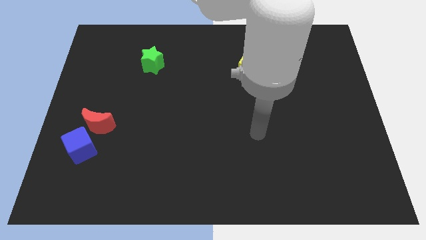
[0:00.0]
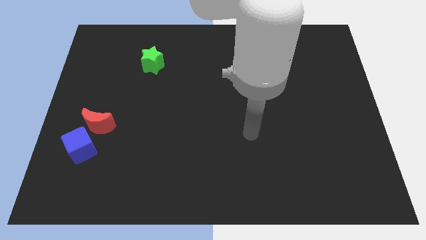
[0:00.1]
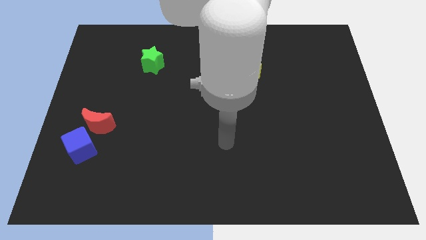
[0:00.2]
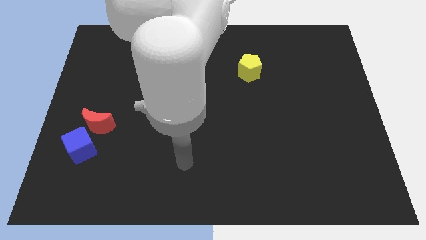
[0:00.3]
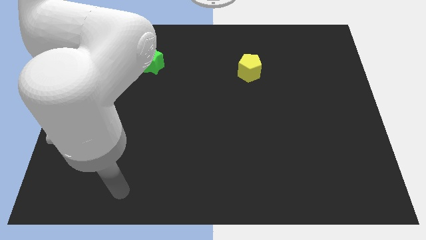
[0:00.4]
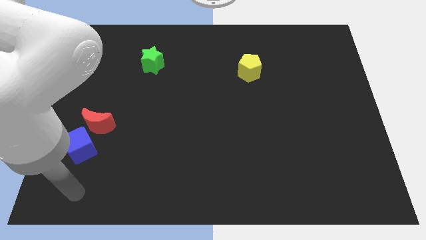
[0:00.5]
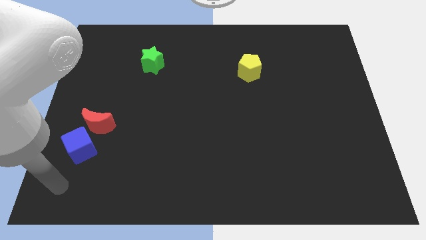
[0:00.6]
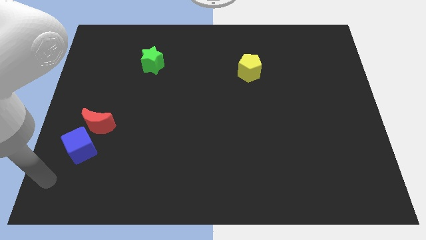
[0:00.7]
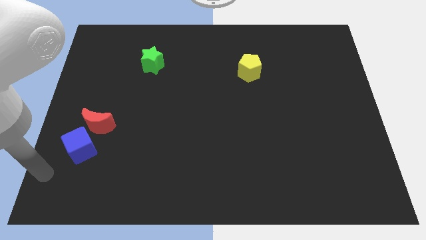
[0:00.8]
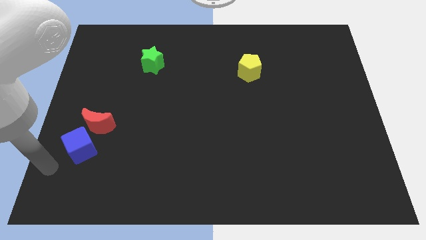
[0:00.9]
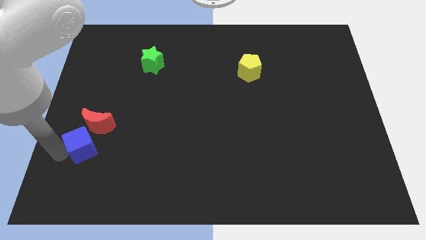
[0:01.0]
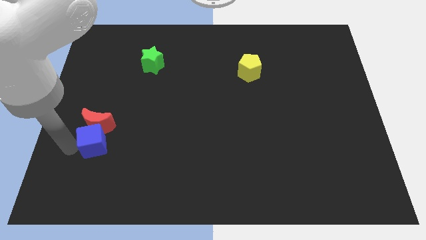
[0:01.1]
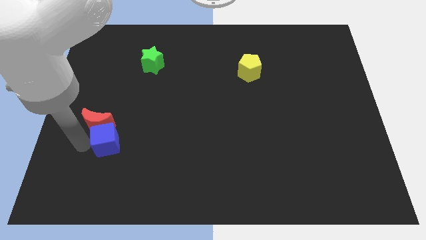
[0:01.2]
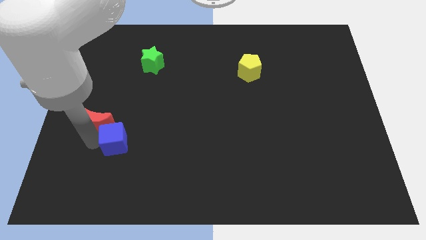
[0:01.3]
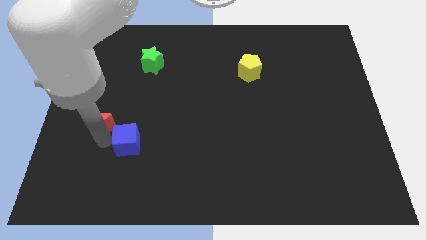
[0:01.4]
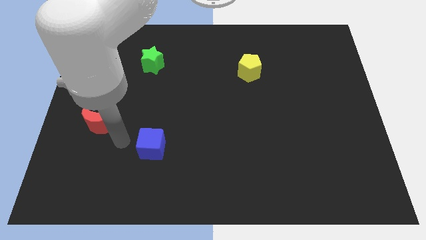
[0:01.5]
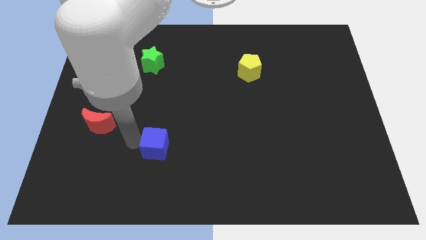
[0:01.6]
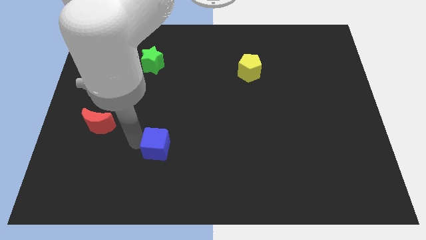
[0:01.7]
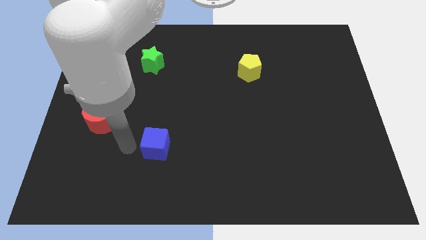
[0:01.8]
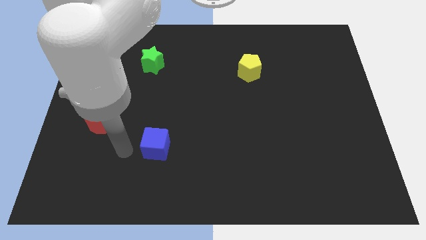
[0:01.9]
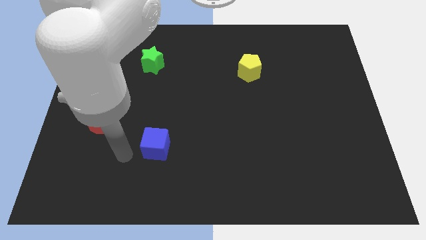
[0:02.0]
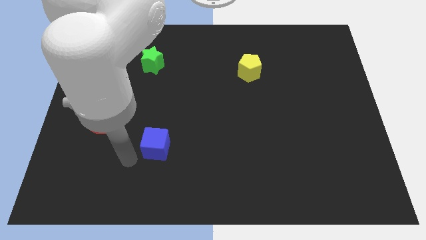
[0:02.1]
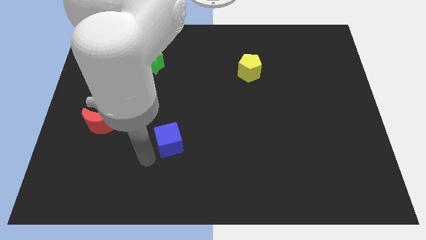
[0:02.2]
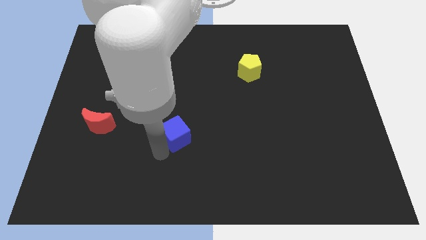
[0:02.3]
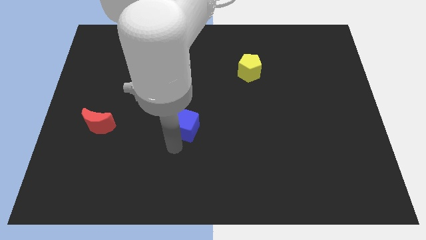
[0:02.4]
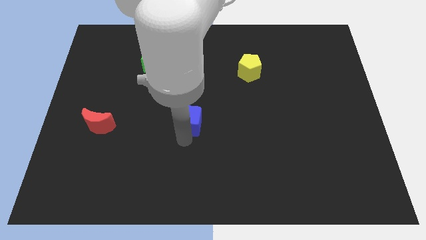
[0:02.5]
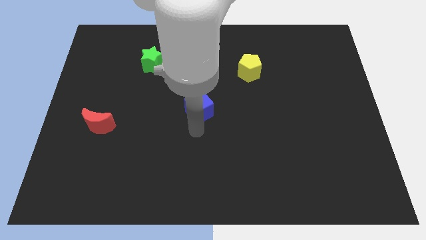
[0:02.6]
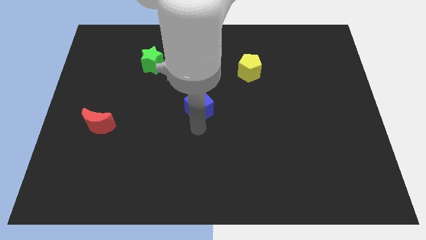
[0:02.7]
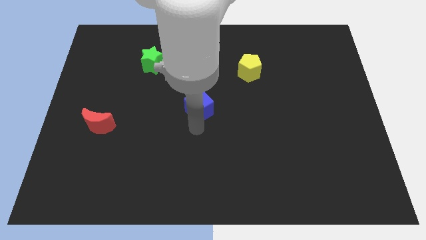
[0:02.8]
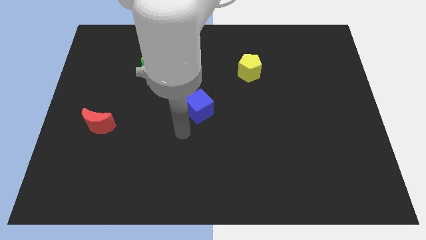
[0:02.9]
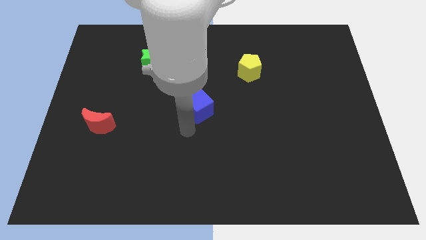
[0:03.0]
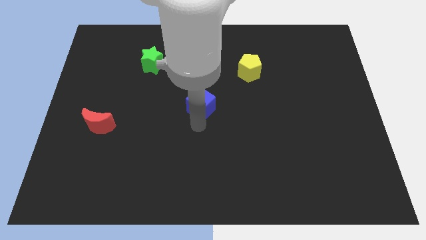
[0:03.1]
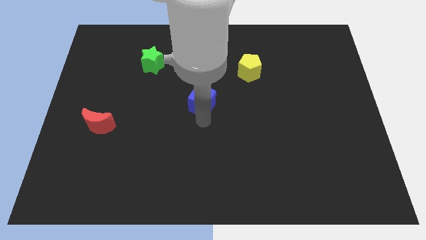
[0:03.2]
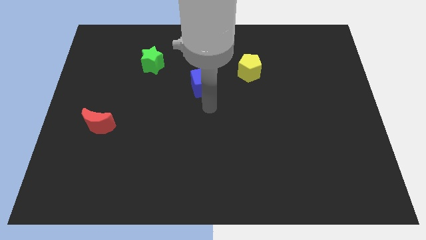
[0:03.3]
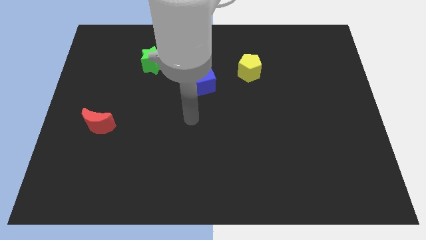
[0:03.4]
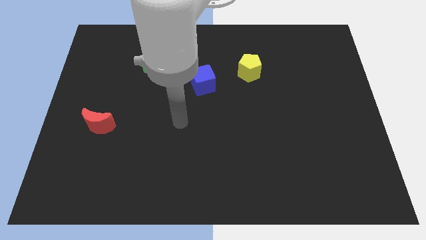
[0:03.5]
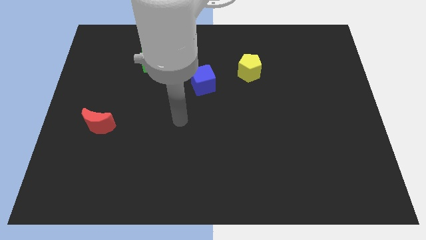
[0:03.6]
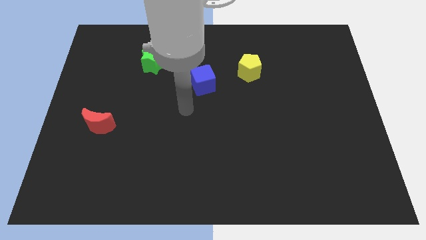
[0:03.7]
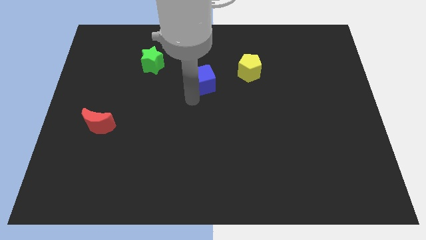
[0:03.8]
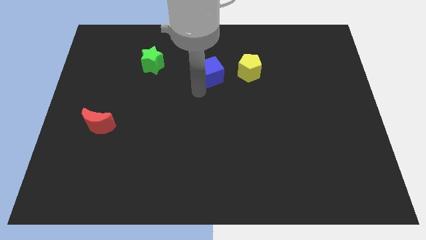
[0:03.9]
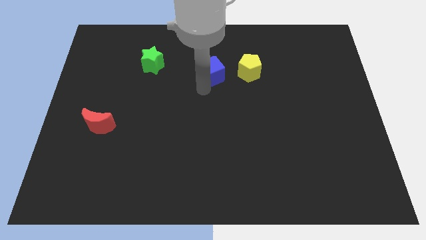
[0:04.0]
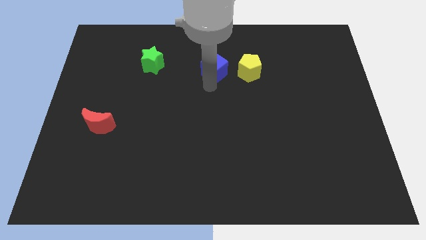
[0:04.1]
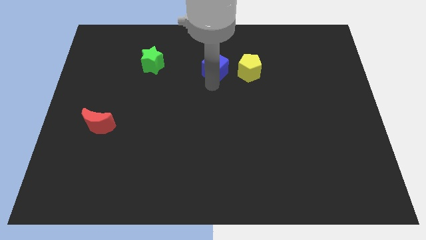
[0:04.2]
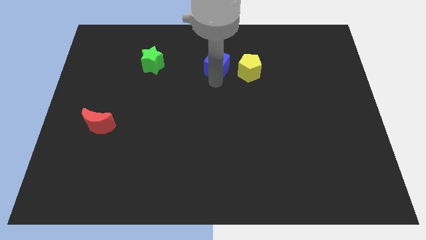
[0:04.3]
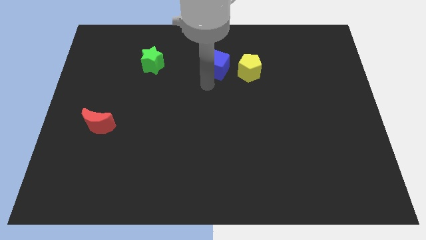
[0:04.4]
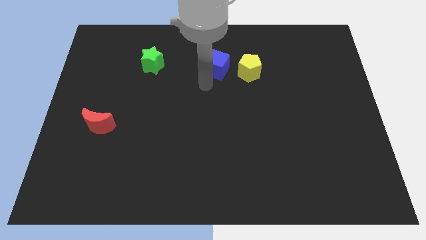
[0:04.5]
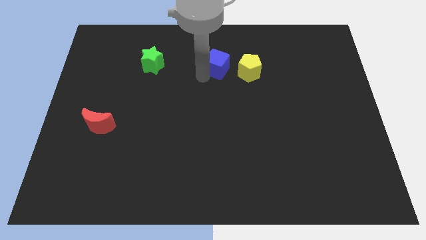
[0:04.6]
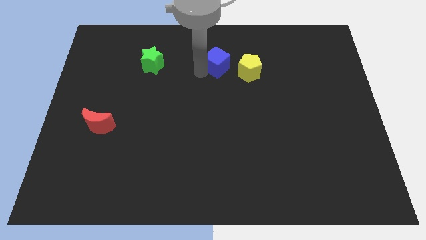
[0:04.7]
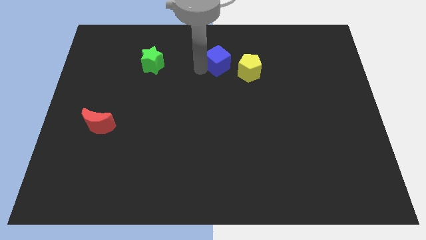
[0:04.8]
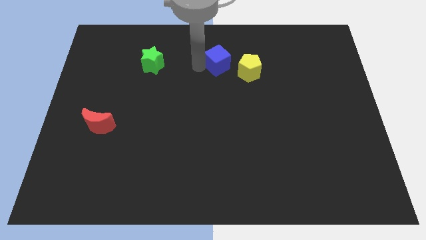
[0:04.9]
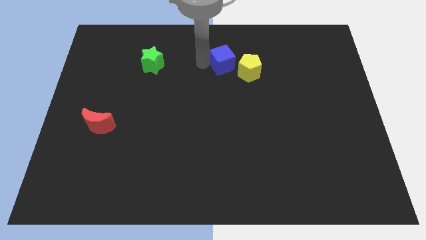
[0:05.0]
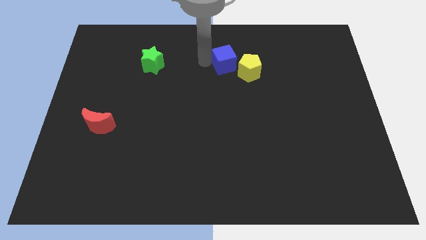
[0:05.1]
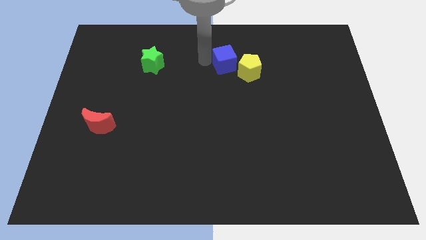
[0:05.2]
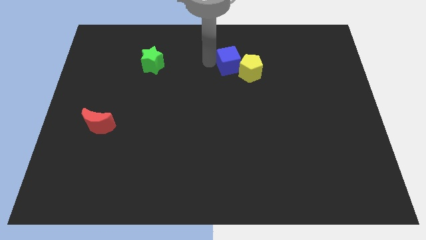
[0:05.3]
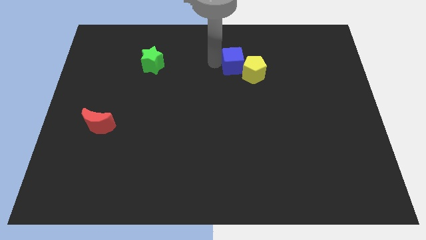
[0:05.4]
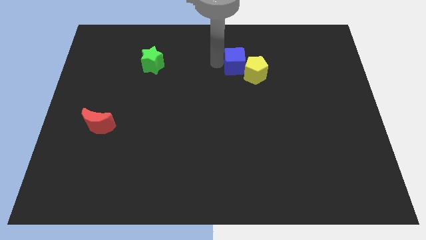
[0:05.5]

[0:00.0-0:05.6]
move the cube close to the yellow block

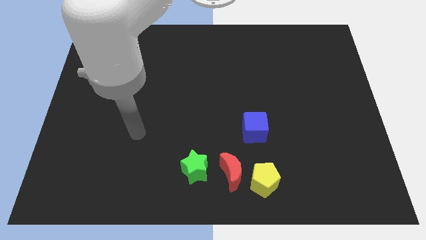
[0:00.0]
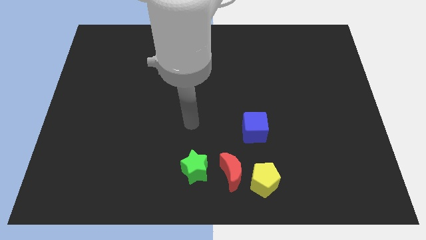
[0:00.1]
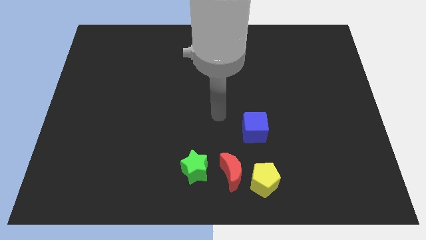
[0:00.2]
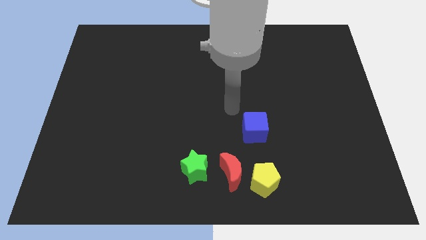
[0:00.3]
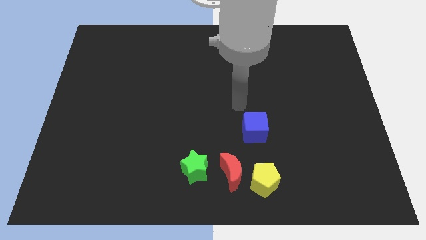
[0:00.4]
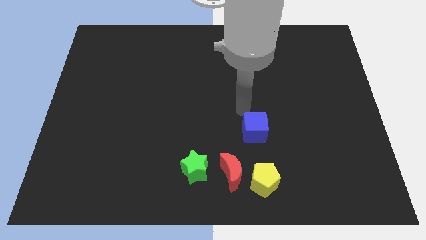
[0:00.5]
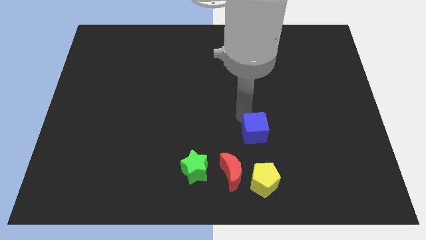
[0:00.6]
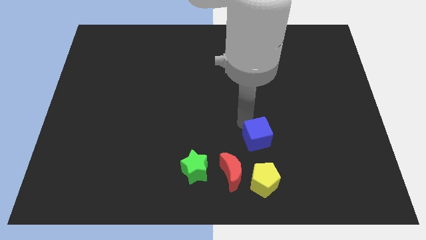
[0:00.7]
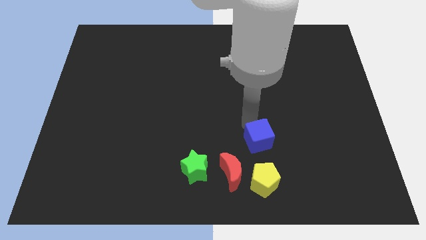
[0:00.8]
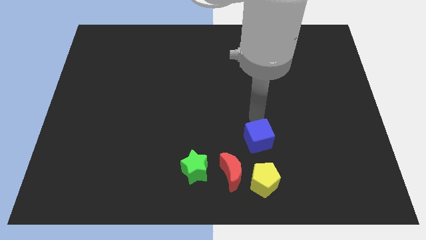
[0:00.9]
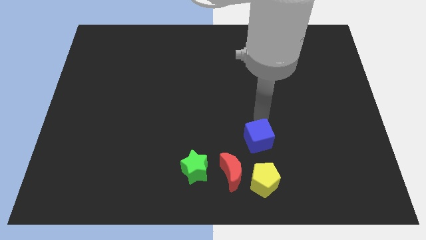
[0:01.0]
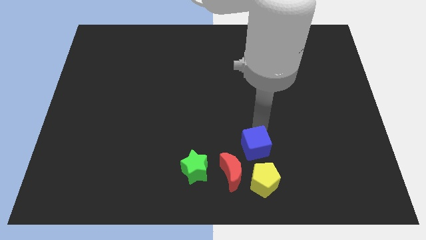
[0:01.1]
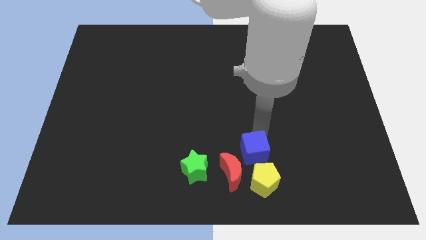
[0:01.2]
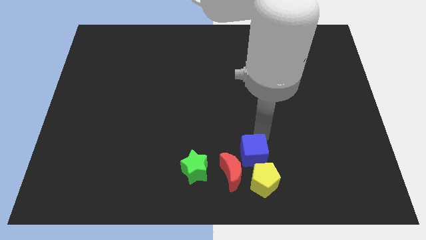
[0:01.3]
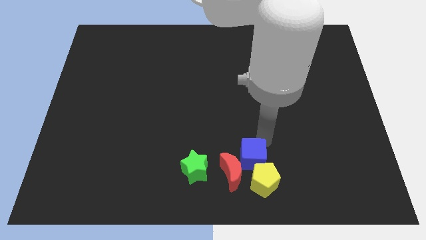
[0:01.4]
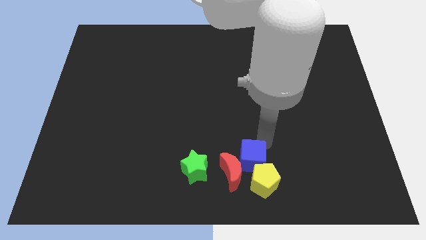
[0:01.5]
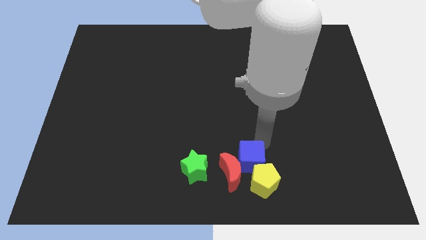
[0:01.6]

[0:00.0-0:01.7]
put the cube next to the pentagon

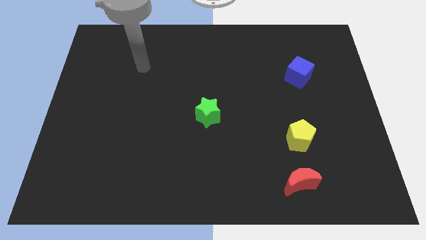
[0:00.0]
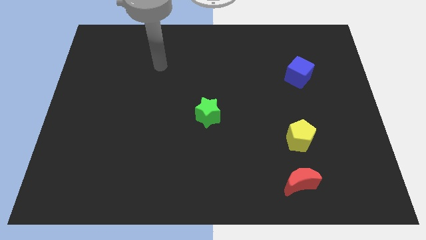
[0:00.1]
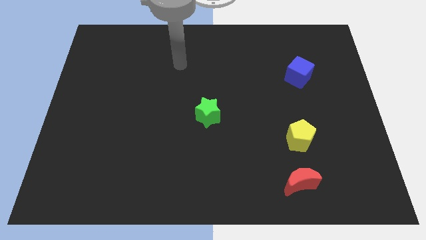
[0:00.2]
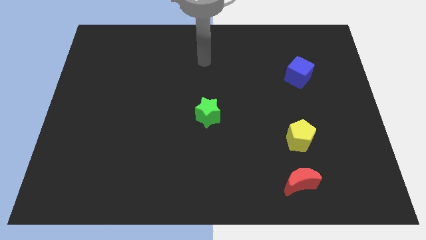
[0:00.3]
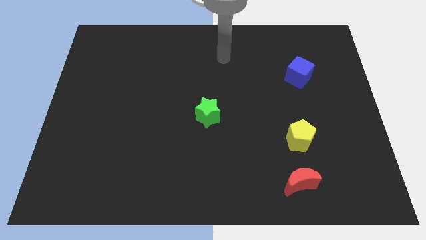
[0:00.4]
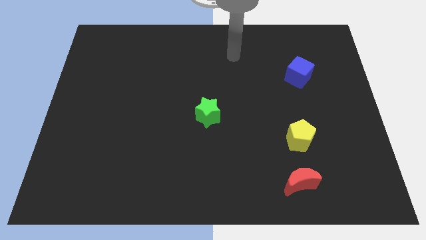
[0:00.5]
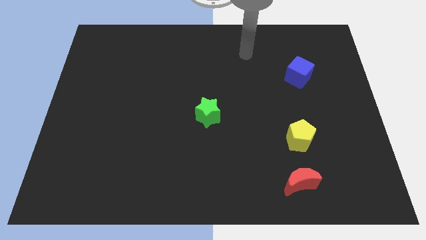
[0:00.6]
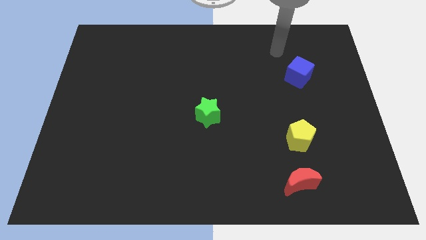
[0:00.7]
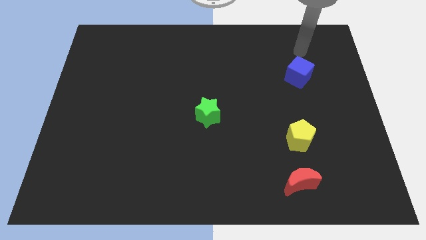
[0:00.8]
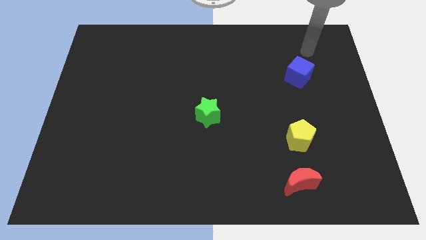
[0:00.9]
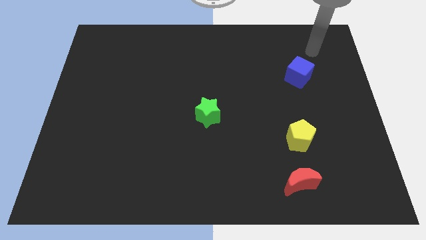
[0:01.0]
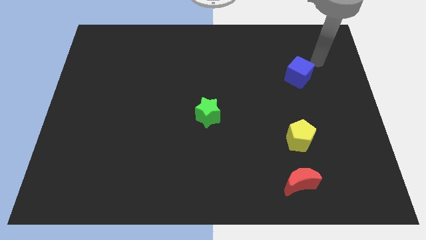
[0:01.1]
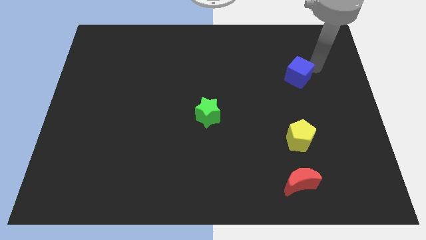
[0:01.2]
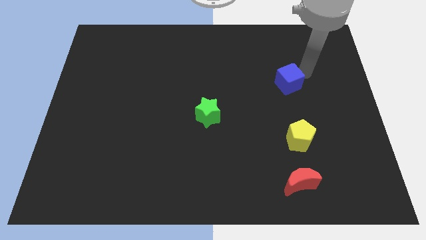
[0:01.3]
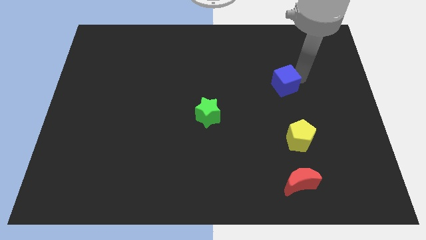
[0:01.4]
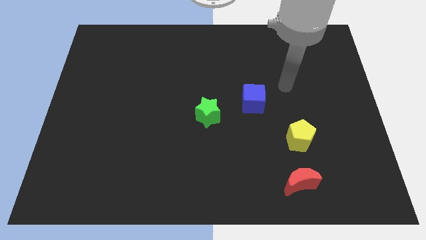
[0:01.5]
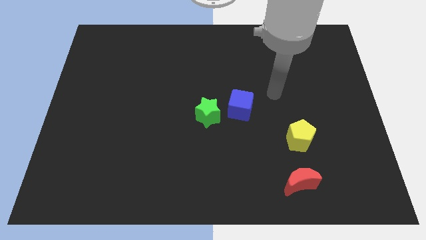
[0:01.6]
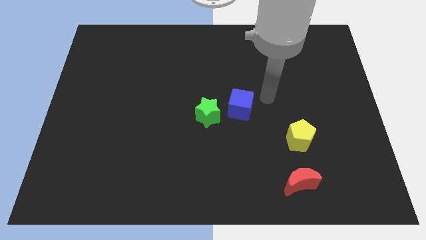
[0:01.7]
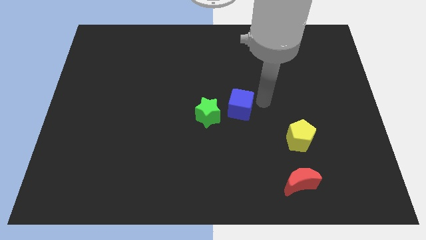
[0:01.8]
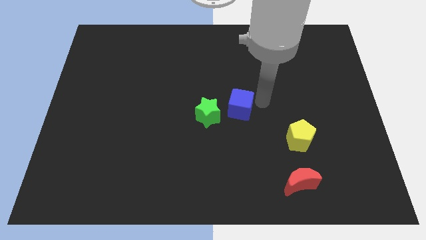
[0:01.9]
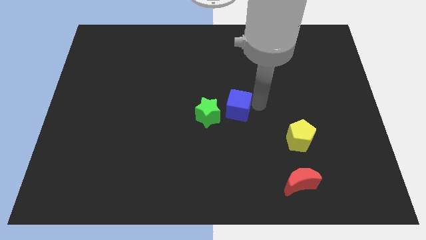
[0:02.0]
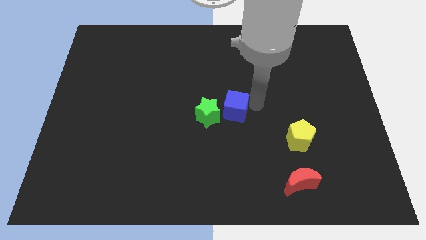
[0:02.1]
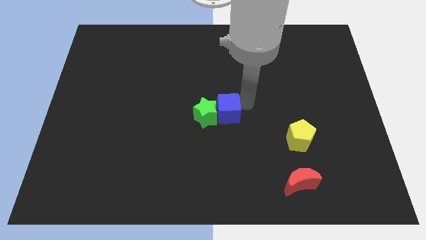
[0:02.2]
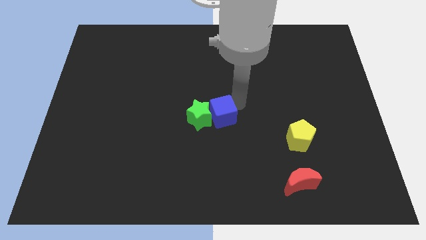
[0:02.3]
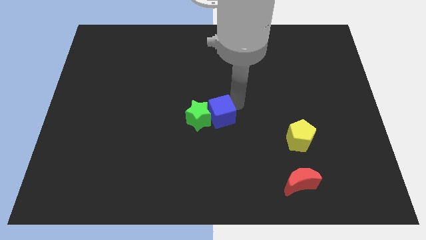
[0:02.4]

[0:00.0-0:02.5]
push the blue cube to the star
